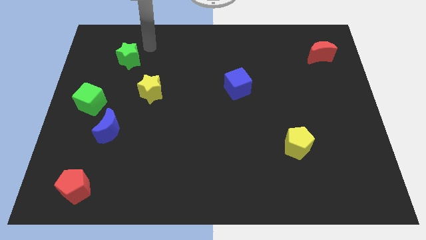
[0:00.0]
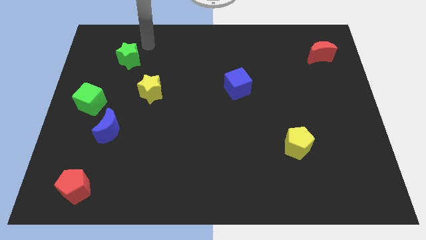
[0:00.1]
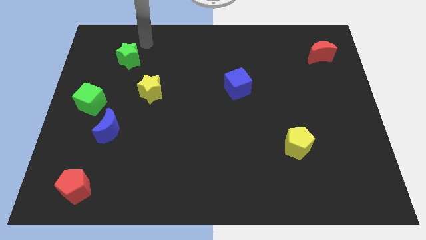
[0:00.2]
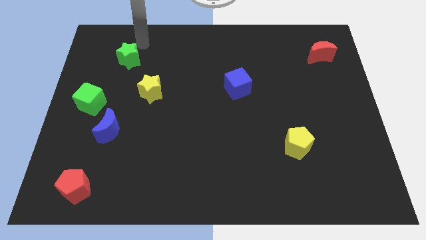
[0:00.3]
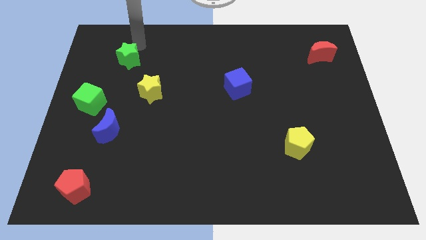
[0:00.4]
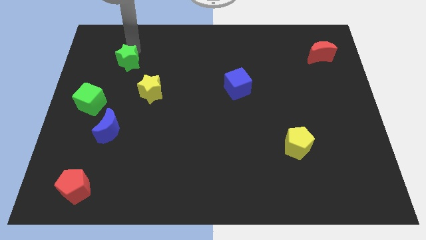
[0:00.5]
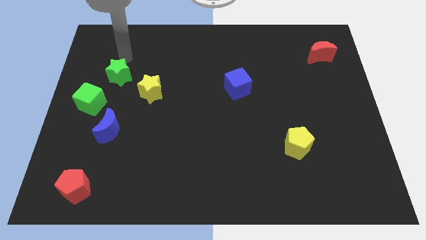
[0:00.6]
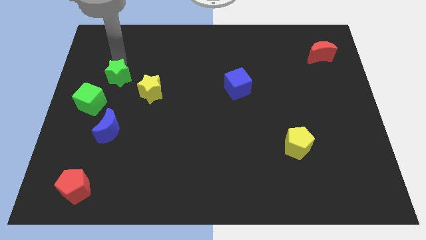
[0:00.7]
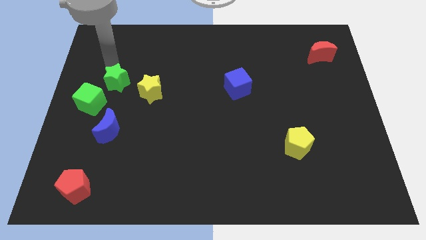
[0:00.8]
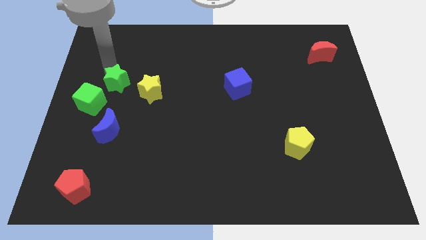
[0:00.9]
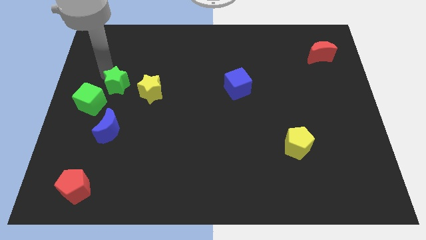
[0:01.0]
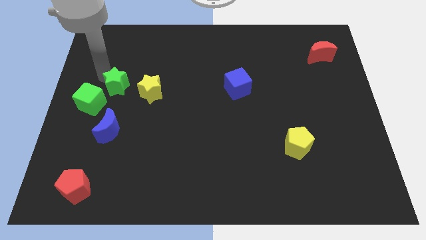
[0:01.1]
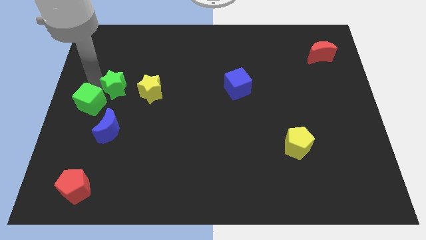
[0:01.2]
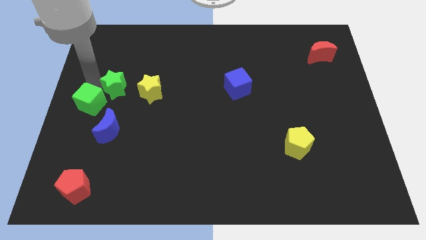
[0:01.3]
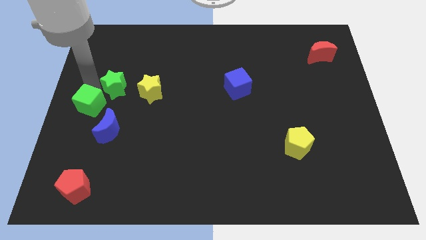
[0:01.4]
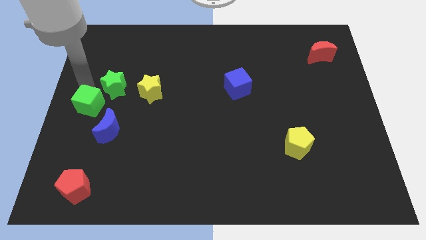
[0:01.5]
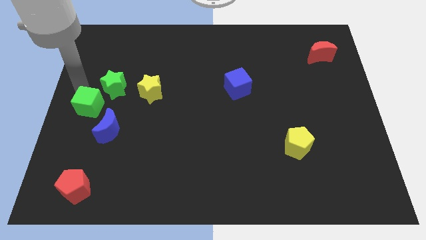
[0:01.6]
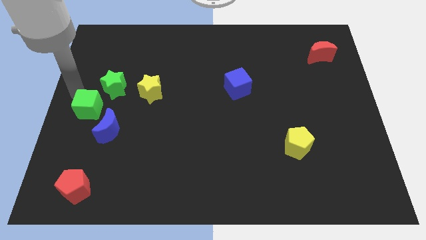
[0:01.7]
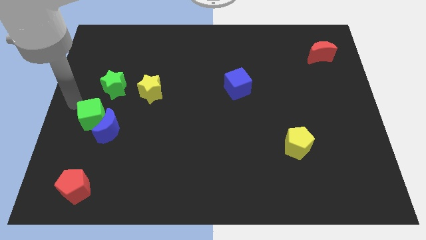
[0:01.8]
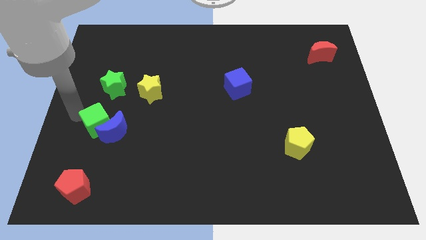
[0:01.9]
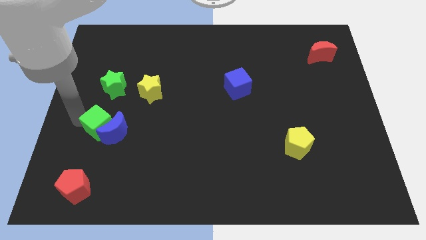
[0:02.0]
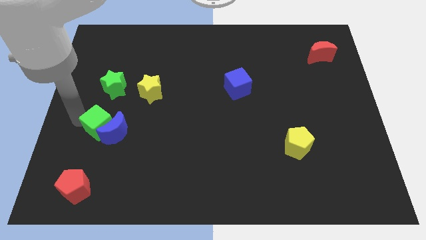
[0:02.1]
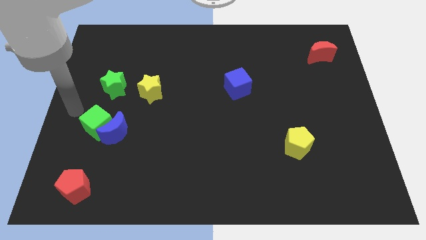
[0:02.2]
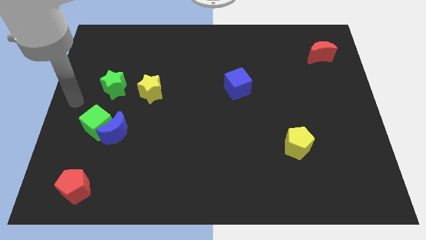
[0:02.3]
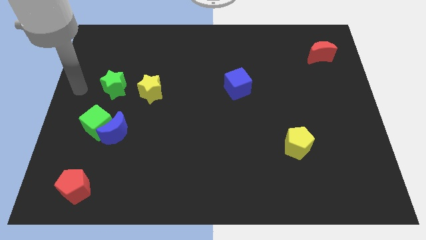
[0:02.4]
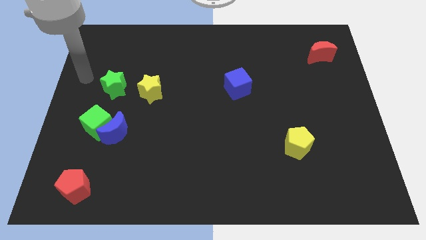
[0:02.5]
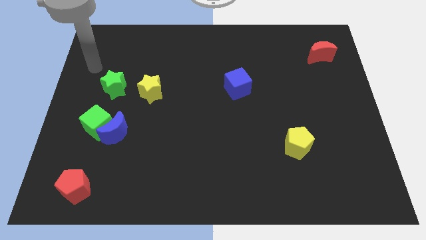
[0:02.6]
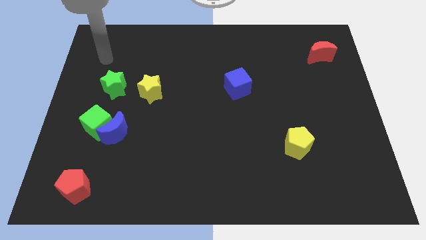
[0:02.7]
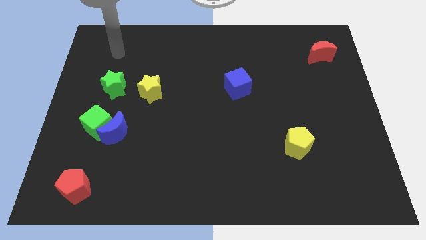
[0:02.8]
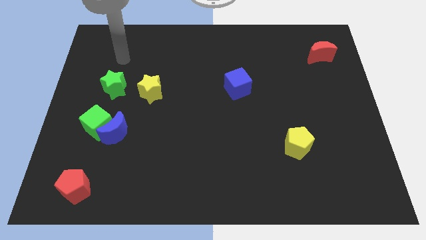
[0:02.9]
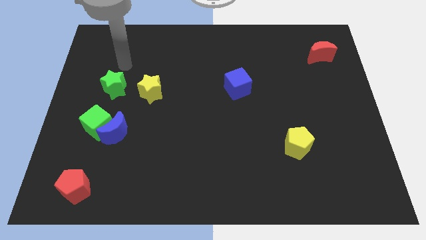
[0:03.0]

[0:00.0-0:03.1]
drag the green cube into the blue moon

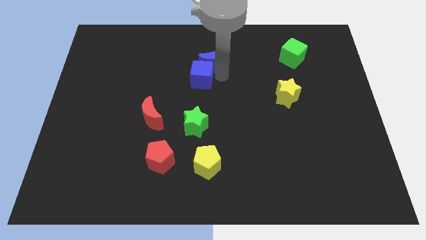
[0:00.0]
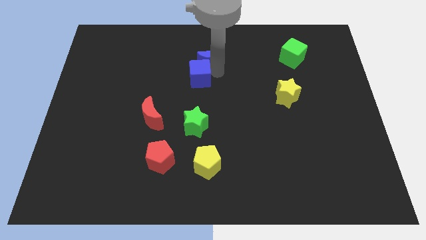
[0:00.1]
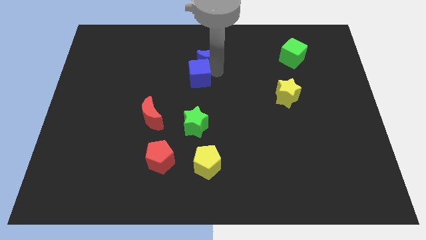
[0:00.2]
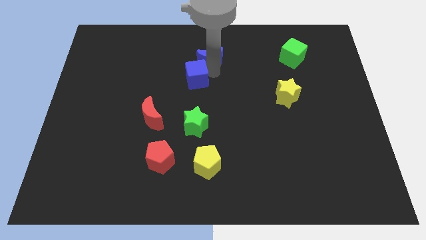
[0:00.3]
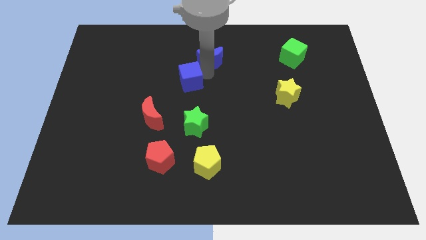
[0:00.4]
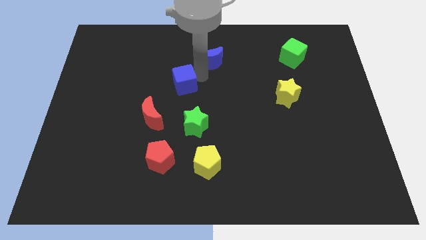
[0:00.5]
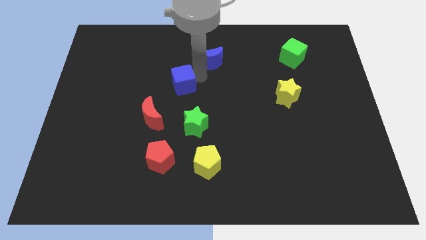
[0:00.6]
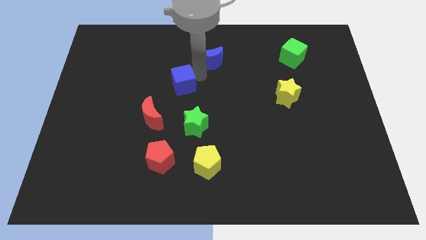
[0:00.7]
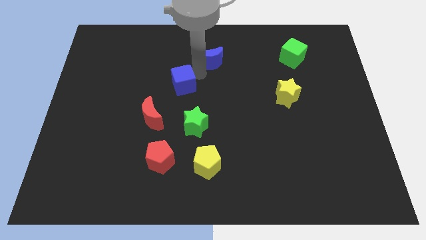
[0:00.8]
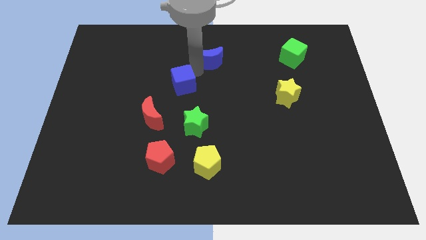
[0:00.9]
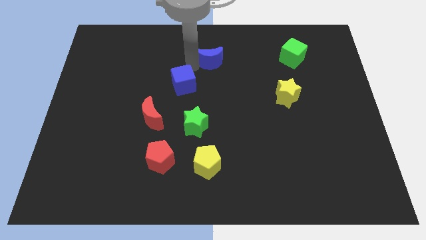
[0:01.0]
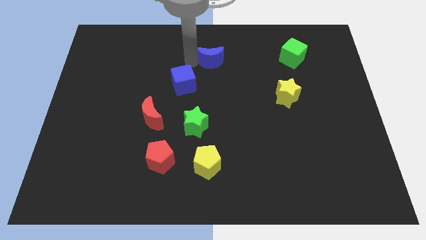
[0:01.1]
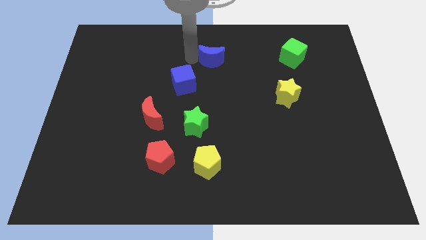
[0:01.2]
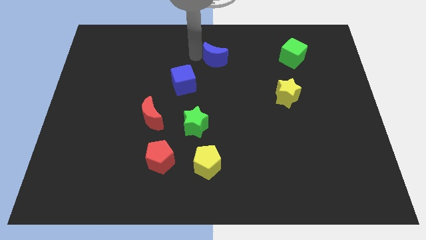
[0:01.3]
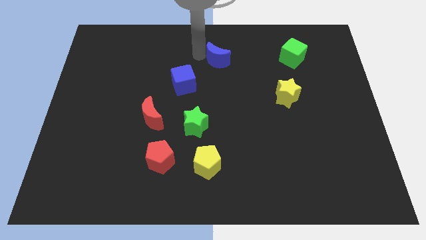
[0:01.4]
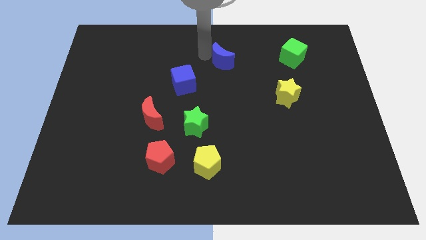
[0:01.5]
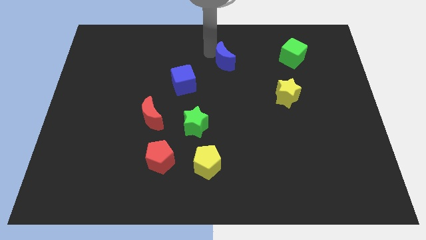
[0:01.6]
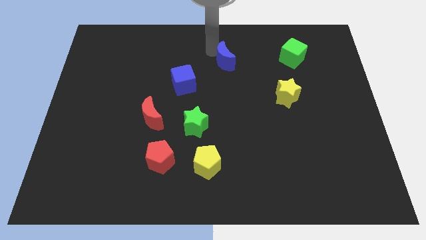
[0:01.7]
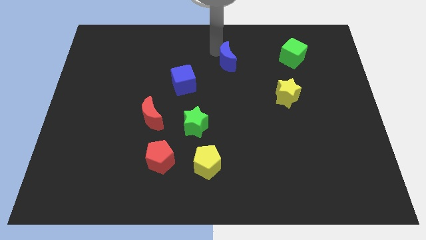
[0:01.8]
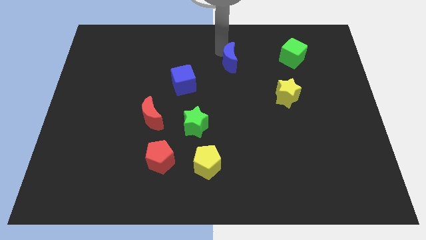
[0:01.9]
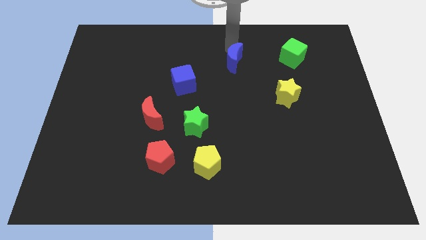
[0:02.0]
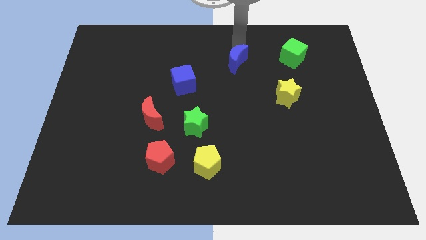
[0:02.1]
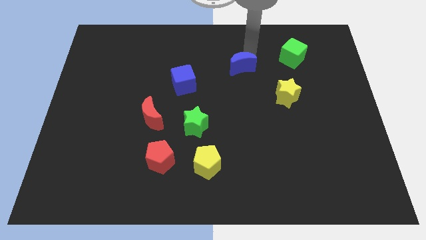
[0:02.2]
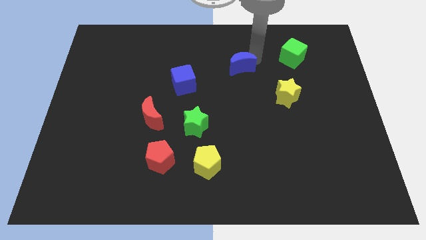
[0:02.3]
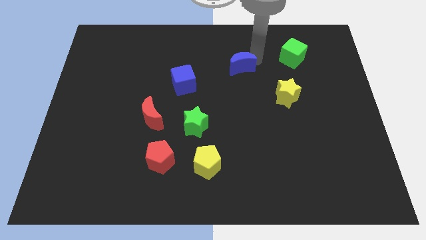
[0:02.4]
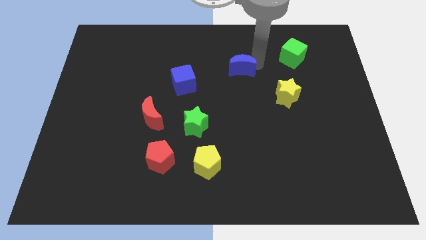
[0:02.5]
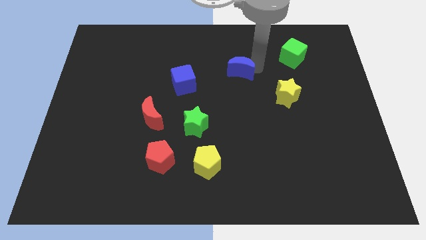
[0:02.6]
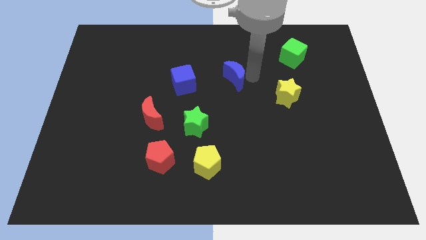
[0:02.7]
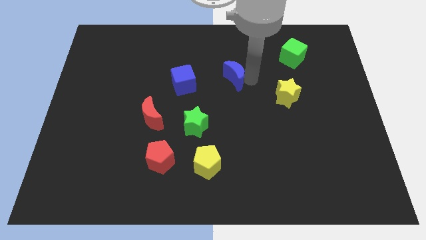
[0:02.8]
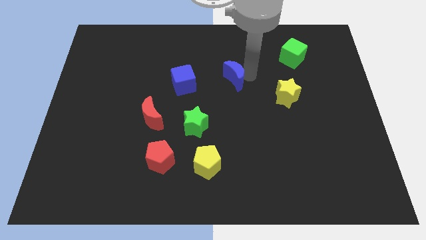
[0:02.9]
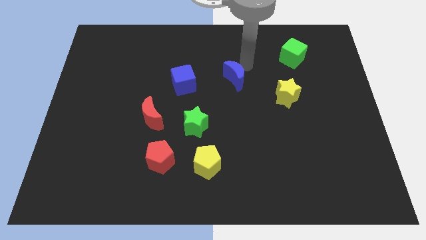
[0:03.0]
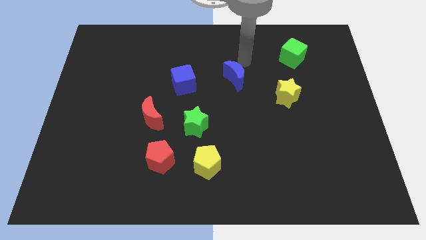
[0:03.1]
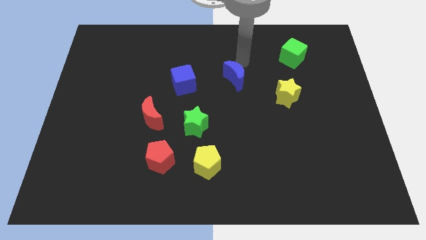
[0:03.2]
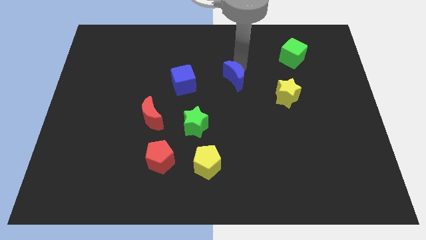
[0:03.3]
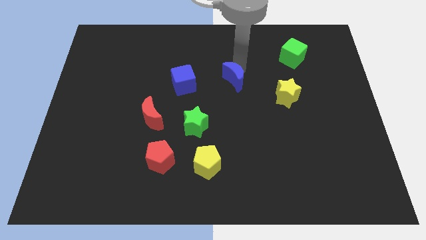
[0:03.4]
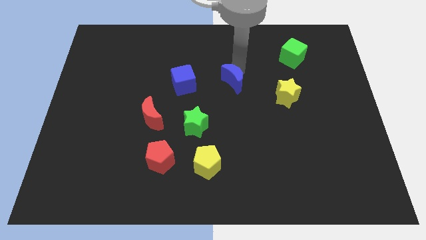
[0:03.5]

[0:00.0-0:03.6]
separate the blue crescent from the blue cube

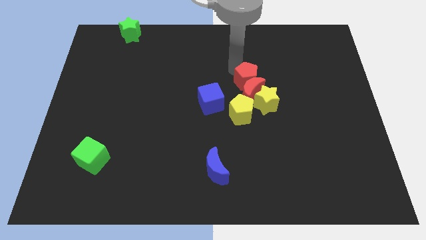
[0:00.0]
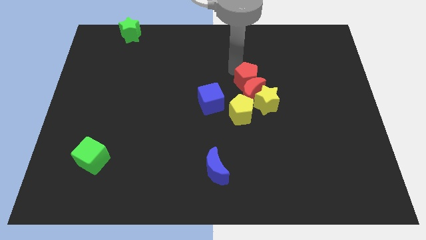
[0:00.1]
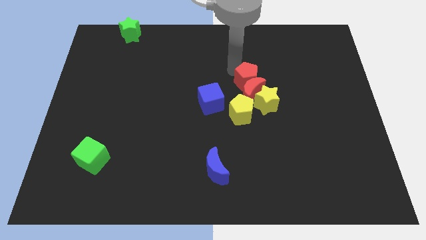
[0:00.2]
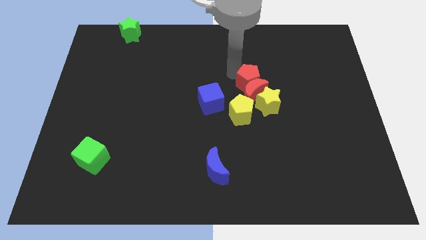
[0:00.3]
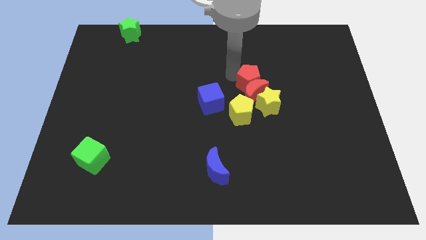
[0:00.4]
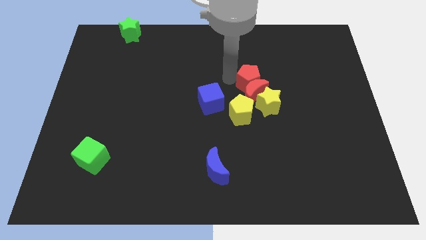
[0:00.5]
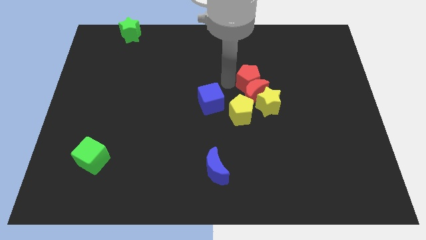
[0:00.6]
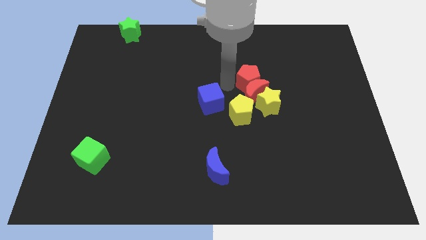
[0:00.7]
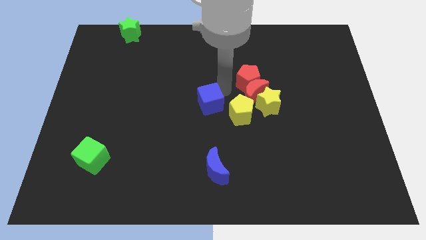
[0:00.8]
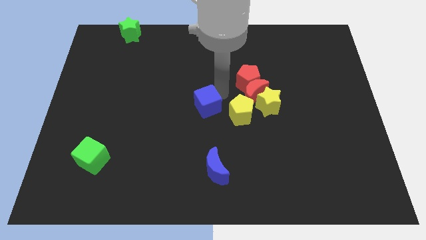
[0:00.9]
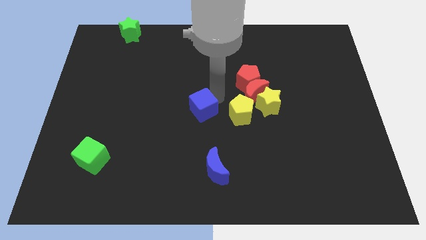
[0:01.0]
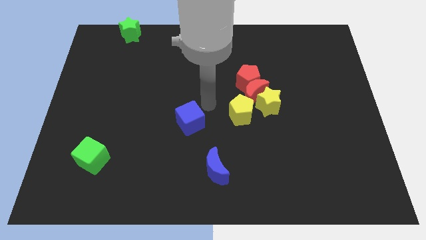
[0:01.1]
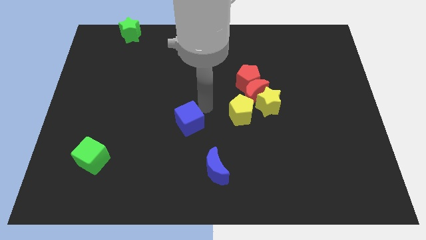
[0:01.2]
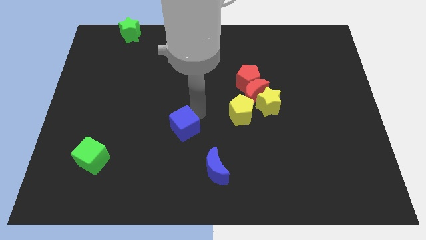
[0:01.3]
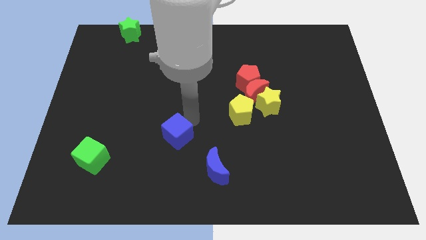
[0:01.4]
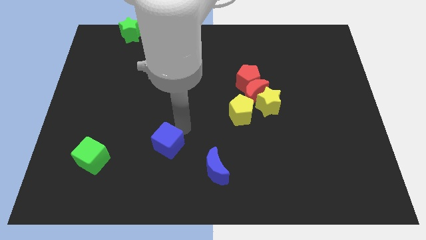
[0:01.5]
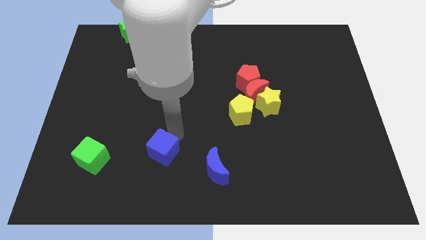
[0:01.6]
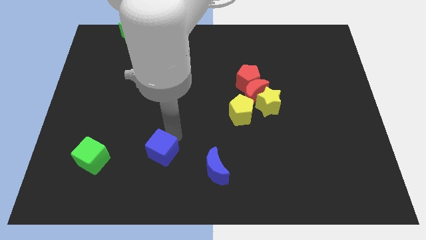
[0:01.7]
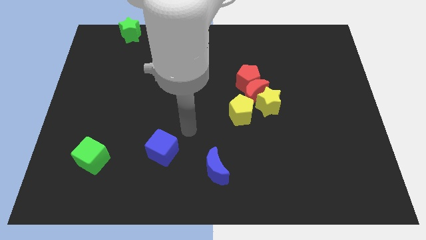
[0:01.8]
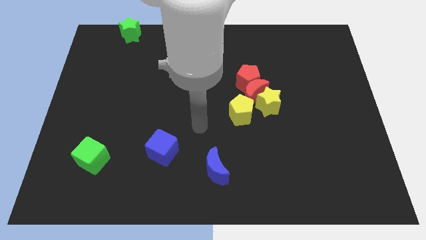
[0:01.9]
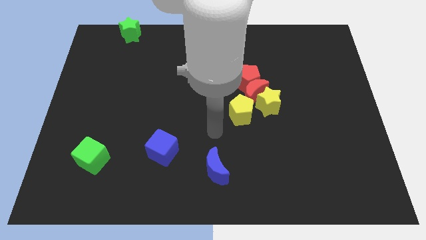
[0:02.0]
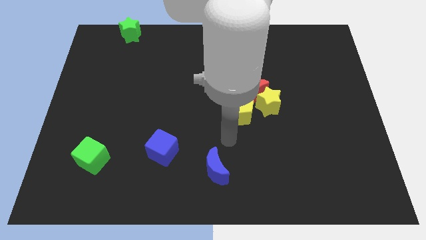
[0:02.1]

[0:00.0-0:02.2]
move the blue cube towards the bottom side of the board
